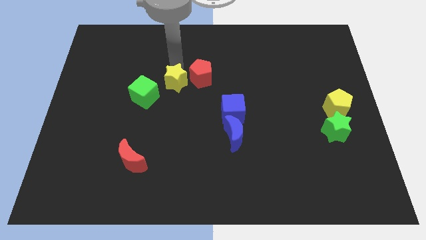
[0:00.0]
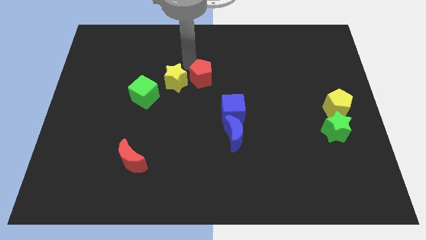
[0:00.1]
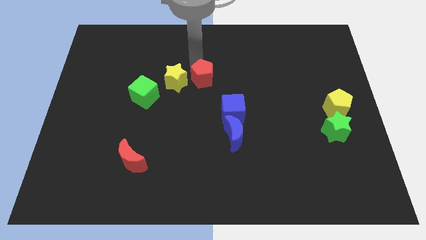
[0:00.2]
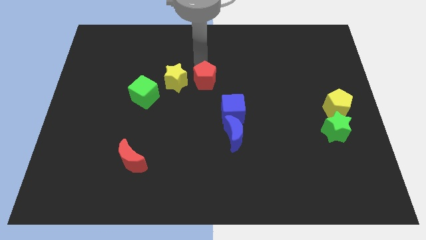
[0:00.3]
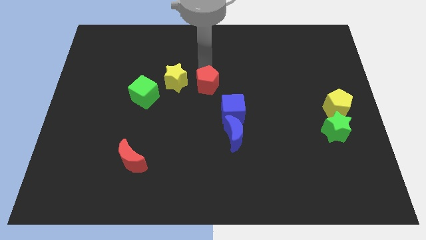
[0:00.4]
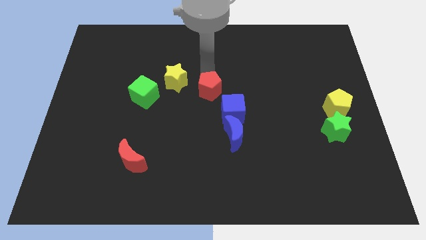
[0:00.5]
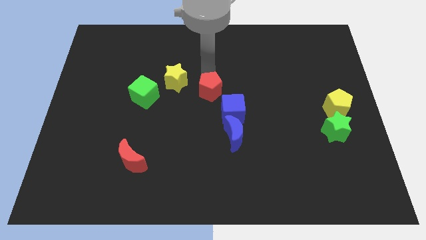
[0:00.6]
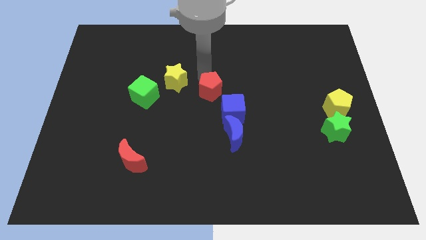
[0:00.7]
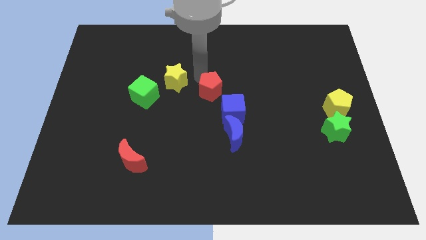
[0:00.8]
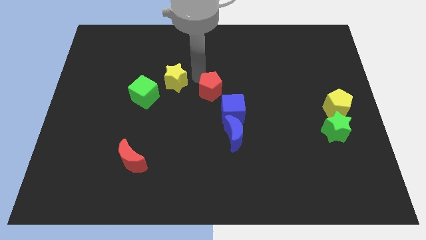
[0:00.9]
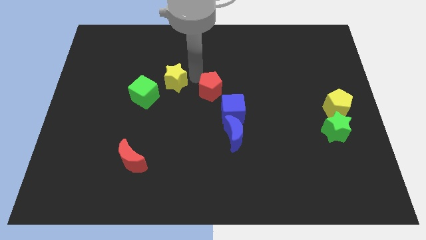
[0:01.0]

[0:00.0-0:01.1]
move the red pentagon in between the yellow star and blue cube

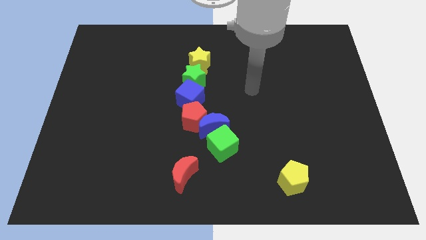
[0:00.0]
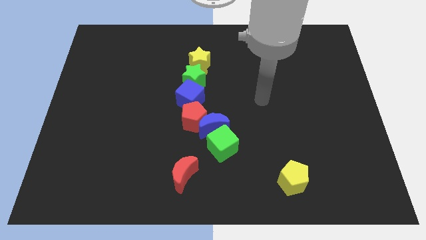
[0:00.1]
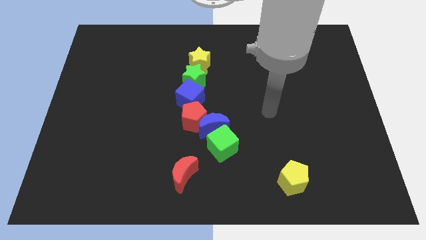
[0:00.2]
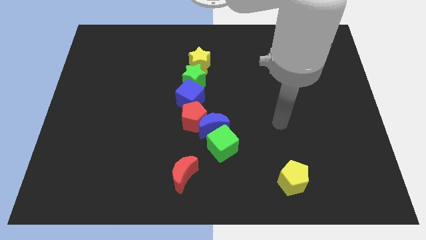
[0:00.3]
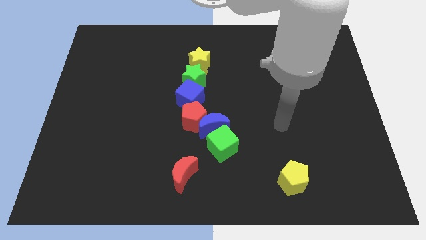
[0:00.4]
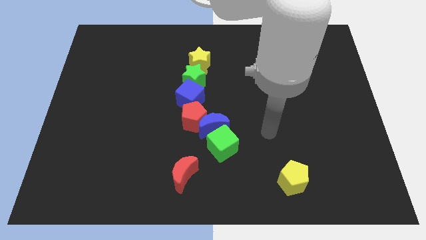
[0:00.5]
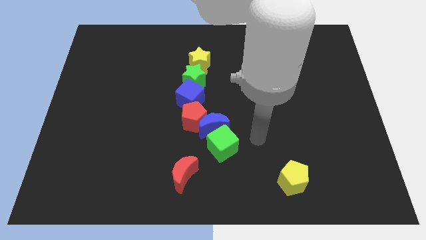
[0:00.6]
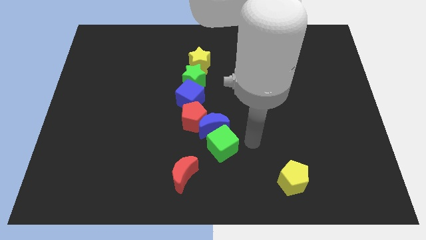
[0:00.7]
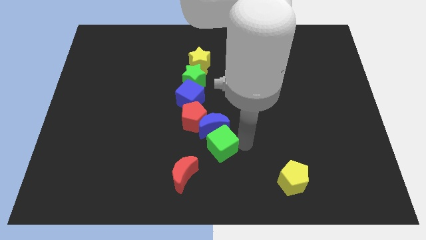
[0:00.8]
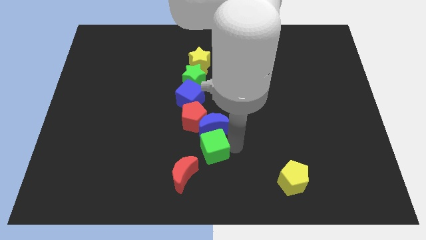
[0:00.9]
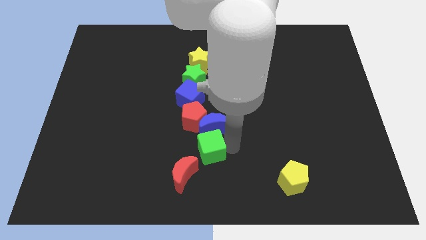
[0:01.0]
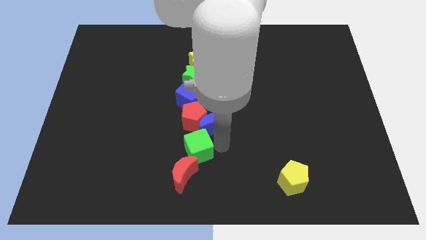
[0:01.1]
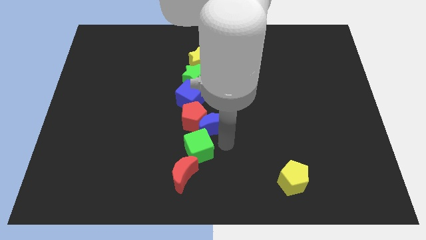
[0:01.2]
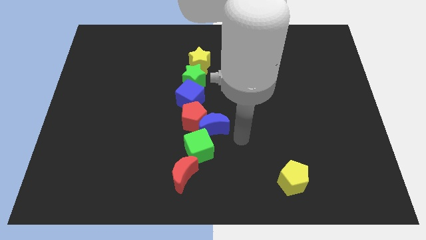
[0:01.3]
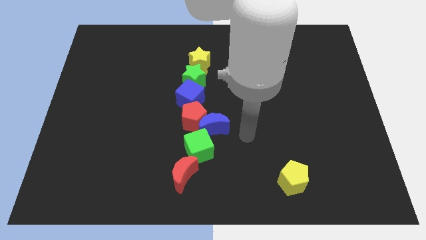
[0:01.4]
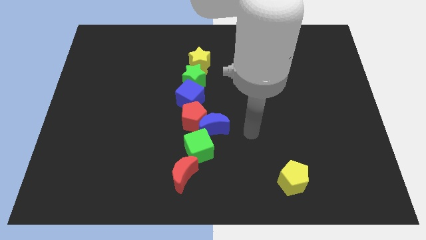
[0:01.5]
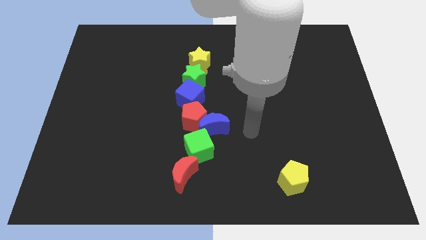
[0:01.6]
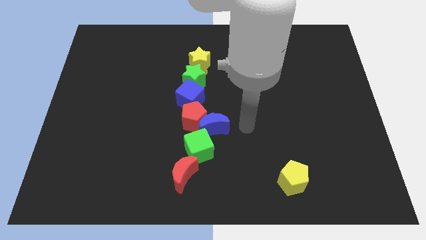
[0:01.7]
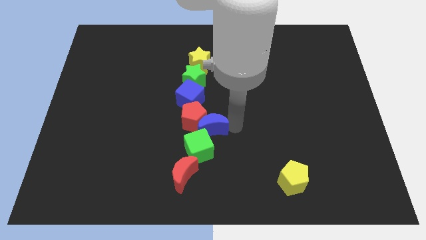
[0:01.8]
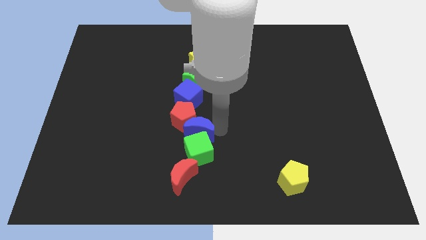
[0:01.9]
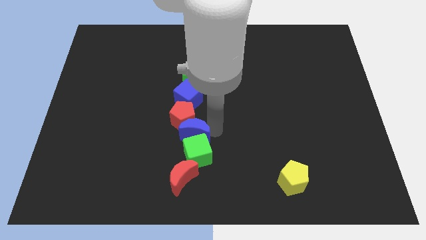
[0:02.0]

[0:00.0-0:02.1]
slide green cube towards red moon

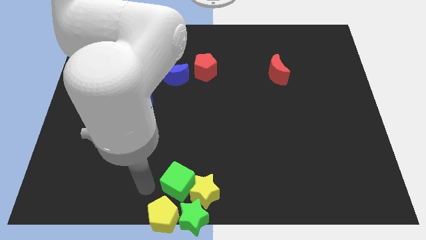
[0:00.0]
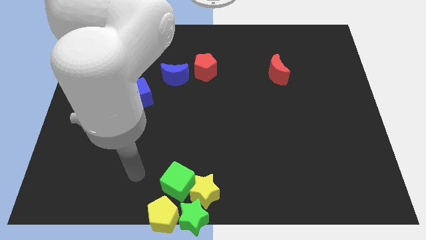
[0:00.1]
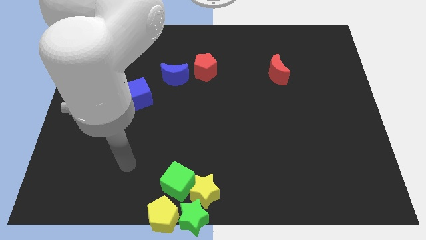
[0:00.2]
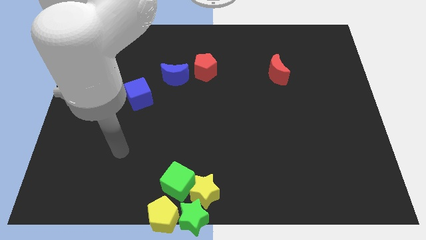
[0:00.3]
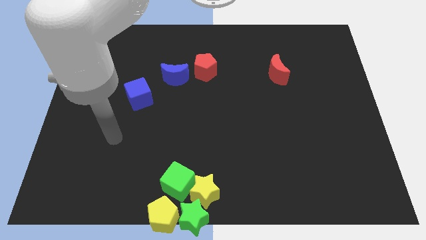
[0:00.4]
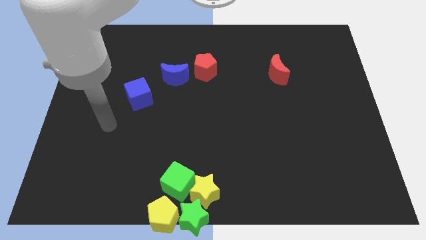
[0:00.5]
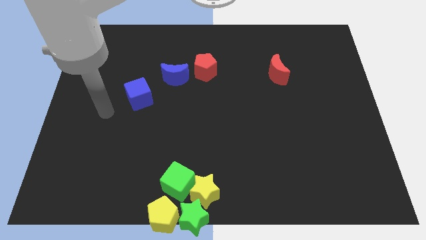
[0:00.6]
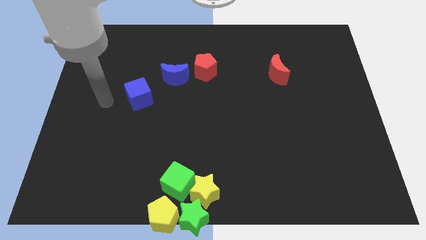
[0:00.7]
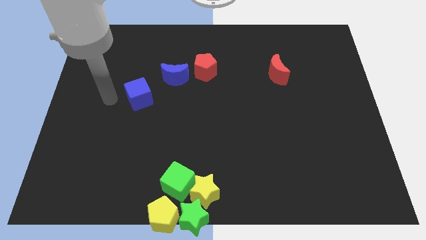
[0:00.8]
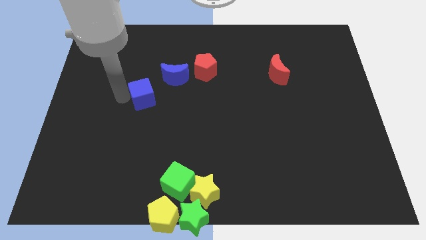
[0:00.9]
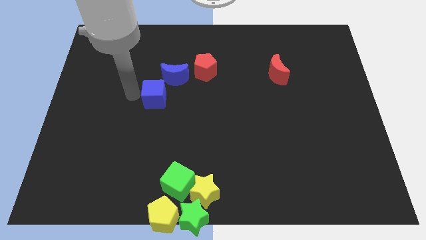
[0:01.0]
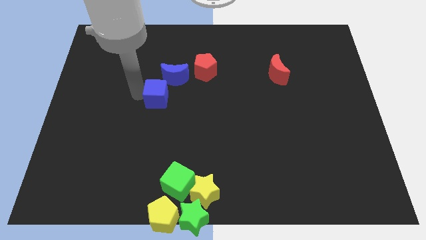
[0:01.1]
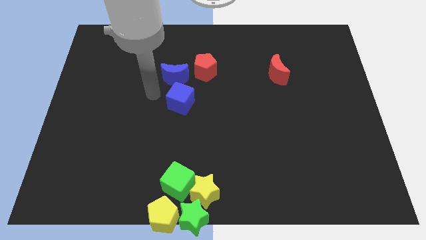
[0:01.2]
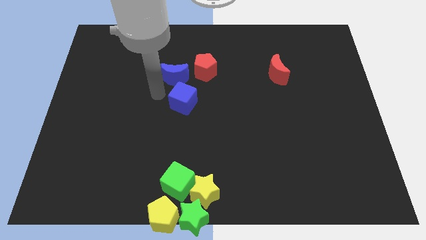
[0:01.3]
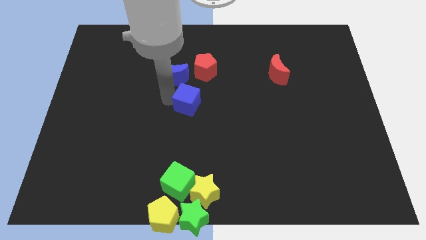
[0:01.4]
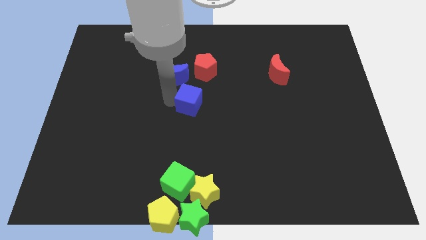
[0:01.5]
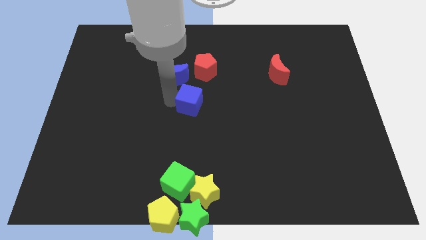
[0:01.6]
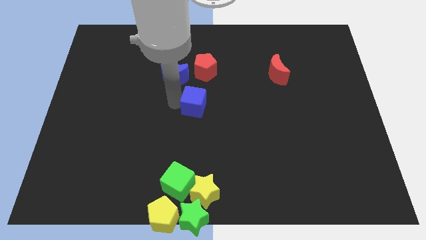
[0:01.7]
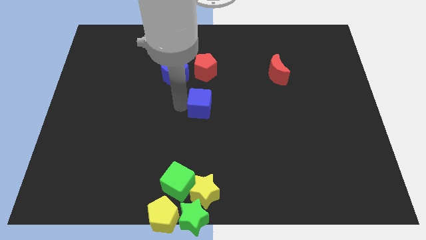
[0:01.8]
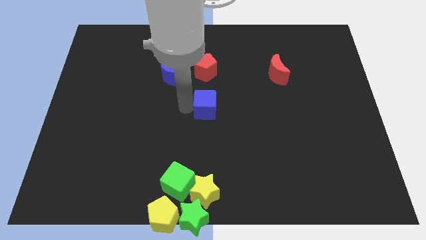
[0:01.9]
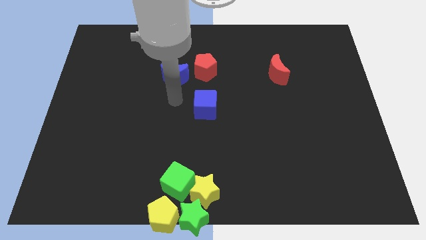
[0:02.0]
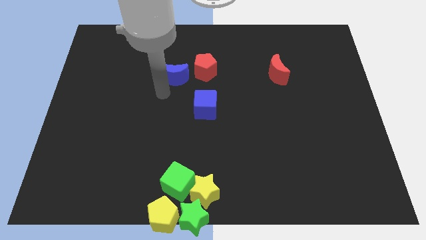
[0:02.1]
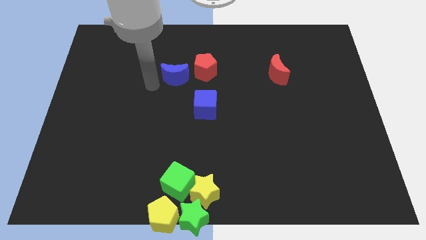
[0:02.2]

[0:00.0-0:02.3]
put the blue cube in between the red pentagon and yellow star

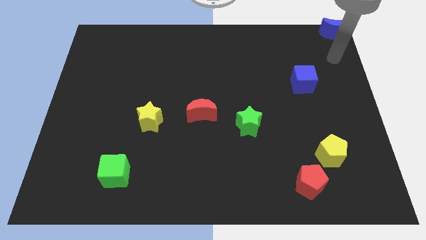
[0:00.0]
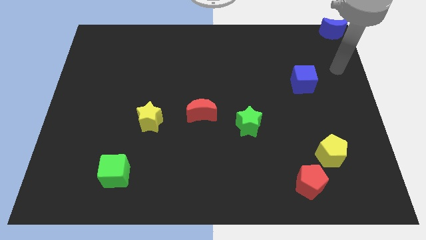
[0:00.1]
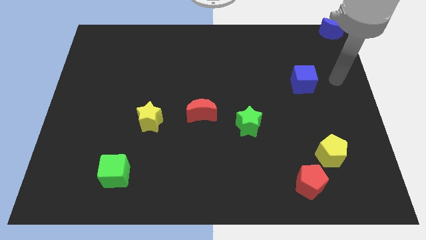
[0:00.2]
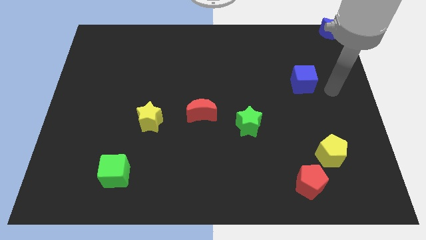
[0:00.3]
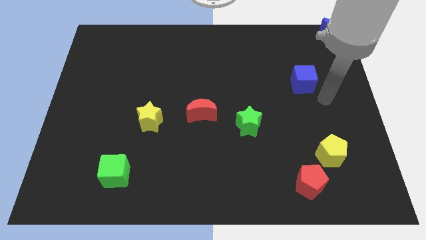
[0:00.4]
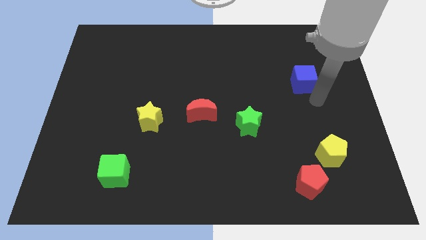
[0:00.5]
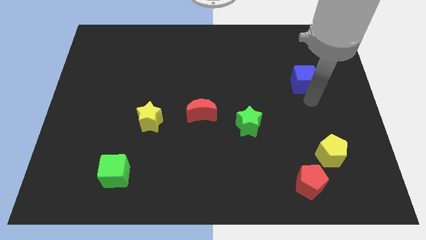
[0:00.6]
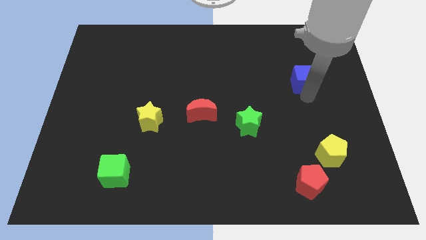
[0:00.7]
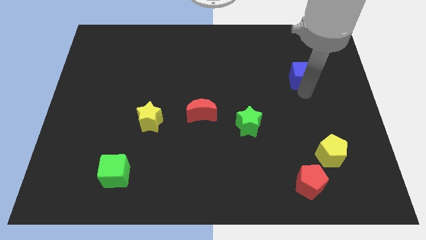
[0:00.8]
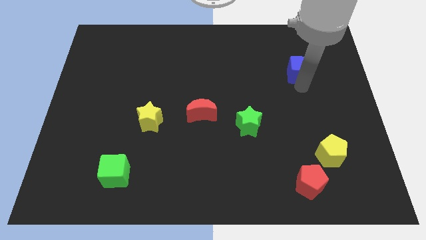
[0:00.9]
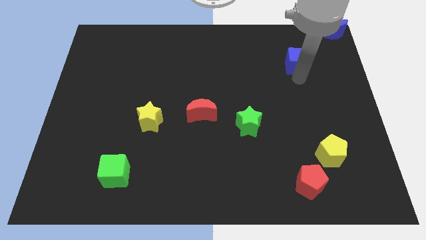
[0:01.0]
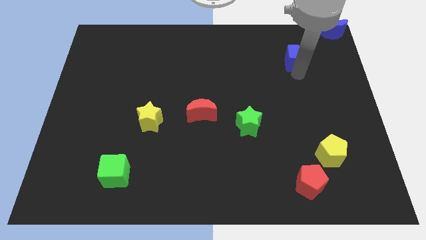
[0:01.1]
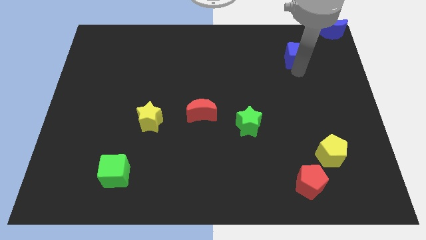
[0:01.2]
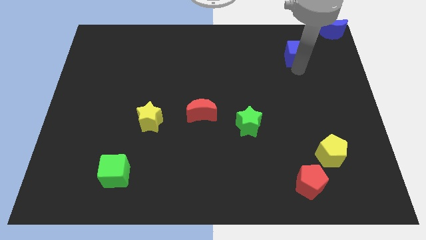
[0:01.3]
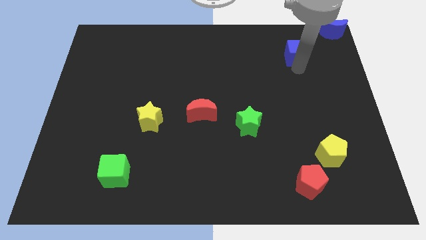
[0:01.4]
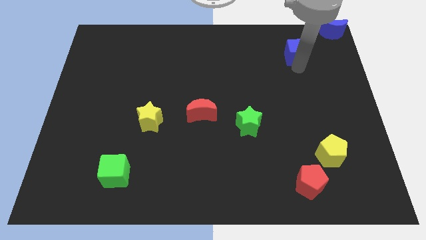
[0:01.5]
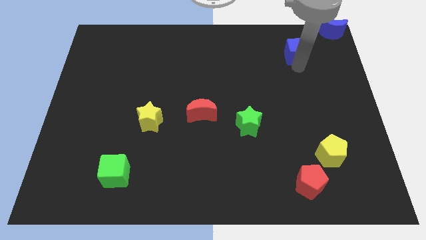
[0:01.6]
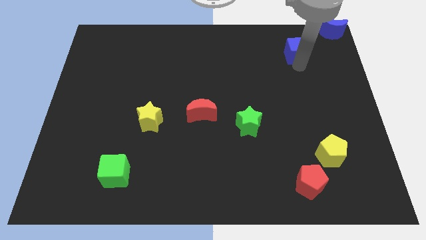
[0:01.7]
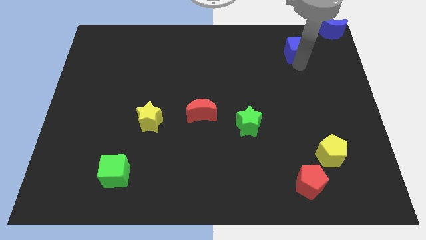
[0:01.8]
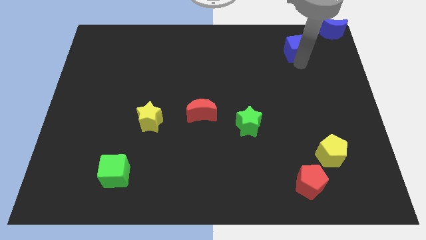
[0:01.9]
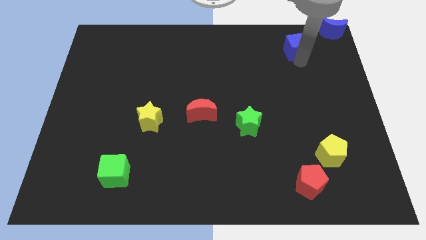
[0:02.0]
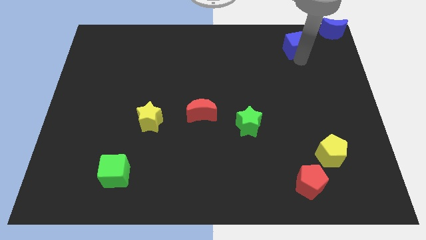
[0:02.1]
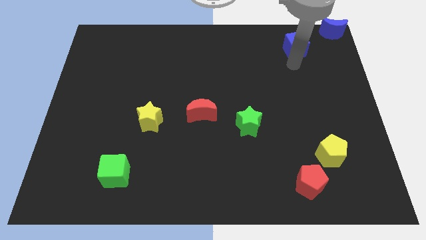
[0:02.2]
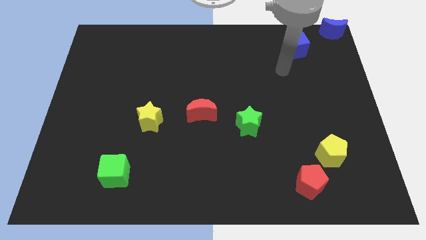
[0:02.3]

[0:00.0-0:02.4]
slide the blue cube towards top side

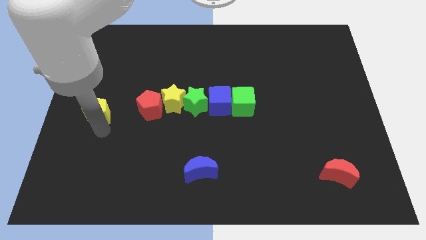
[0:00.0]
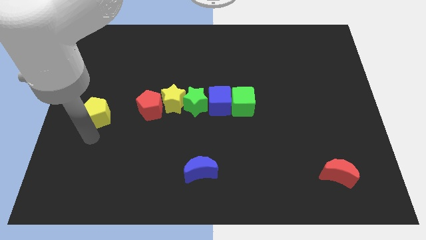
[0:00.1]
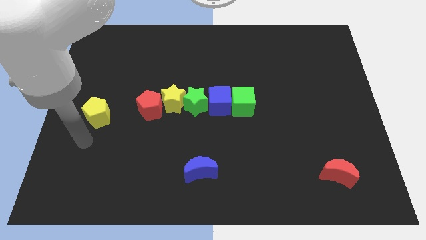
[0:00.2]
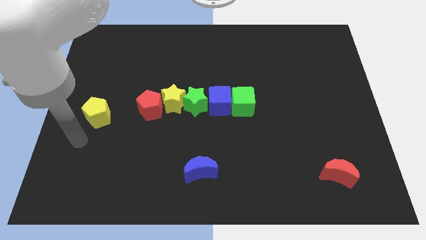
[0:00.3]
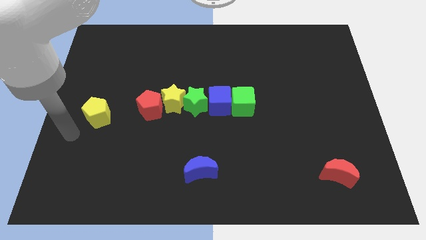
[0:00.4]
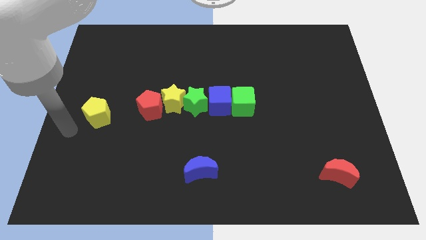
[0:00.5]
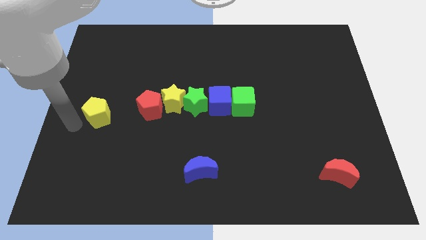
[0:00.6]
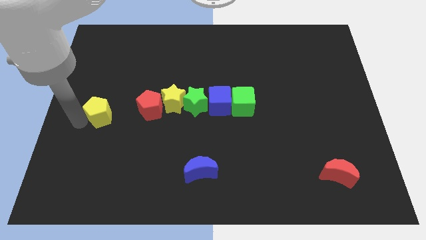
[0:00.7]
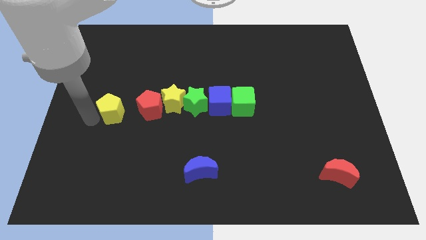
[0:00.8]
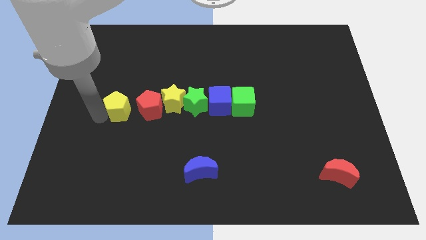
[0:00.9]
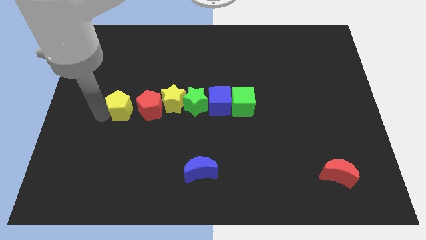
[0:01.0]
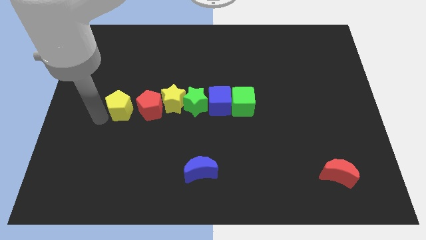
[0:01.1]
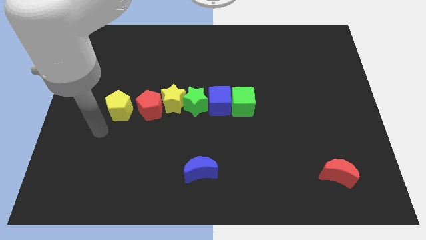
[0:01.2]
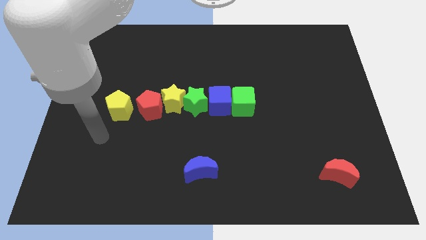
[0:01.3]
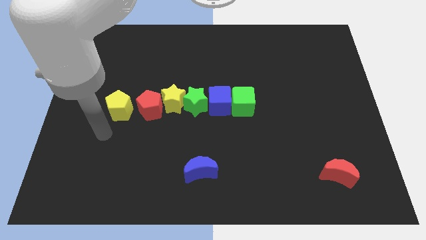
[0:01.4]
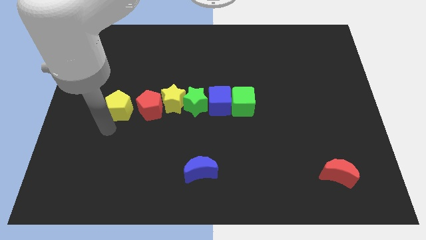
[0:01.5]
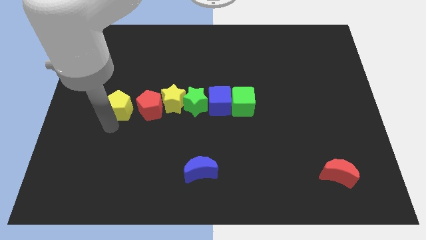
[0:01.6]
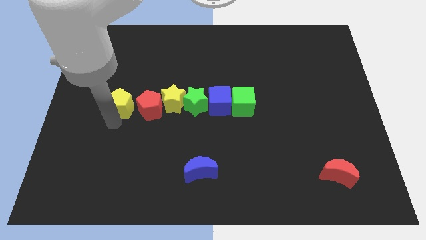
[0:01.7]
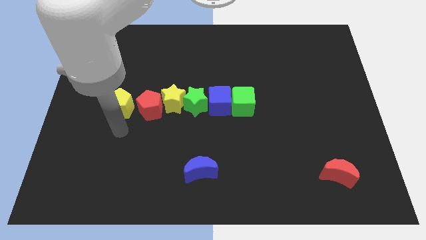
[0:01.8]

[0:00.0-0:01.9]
move the yellow pentagon close to the left of the red pentagon
